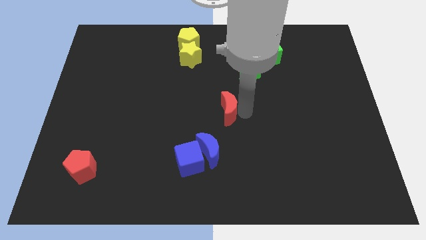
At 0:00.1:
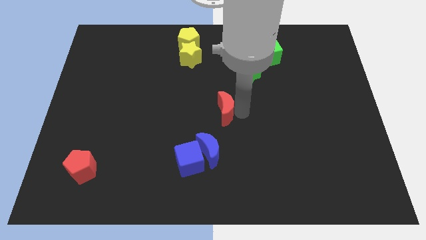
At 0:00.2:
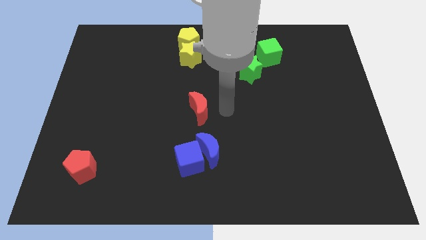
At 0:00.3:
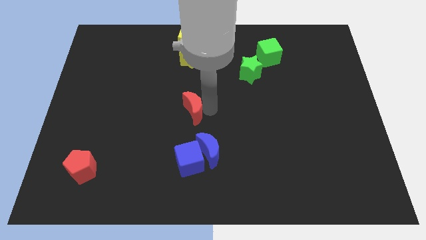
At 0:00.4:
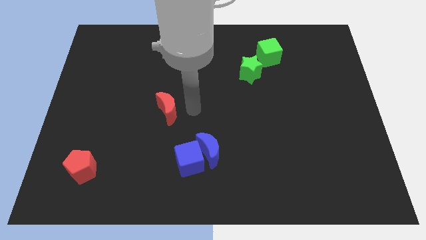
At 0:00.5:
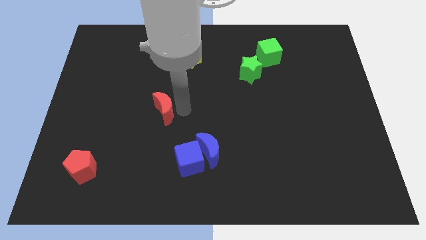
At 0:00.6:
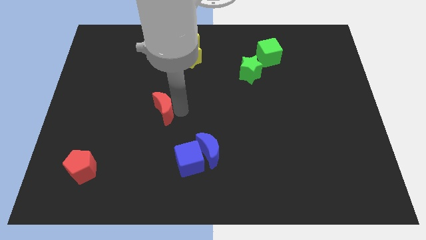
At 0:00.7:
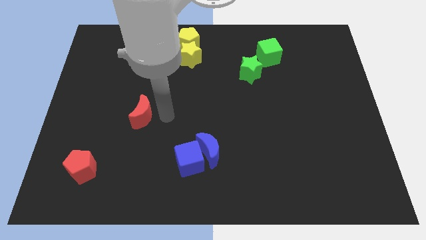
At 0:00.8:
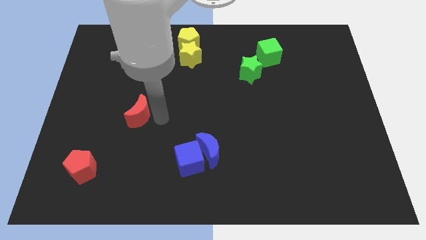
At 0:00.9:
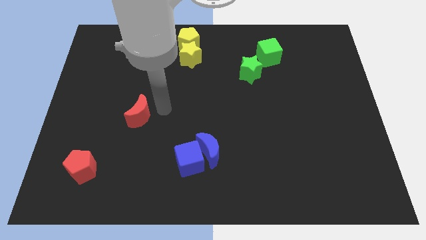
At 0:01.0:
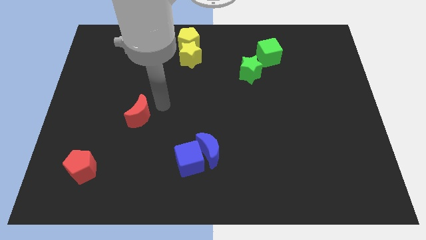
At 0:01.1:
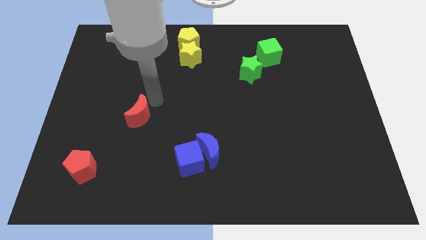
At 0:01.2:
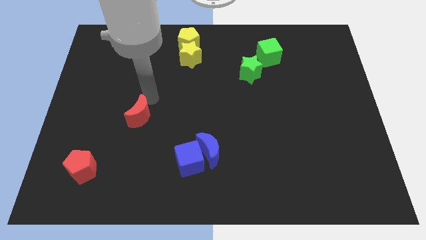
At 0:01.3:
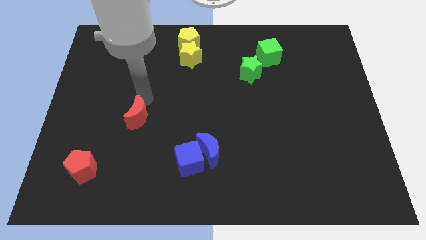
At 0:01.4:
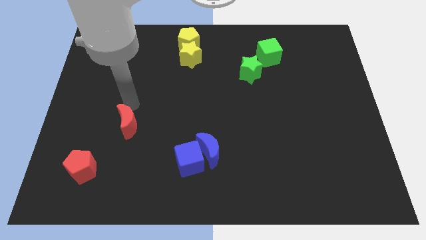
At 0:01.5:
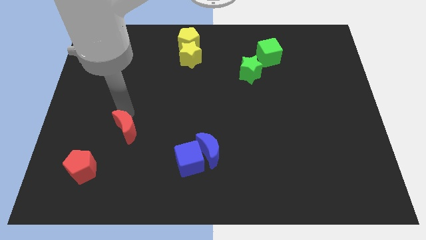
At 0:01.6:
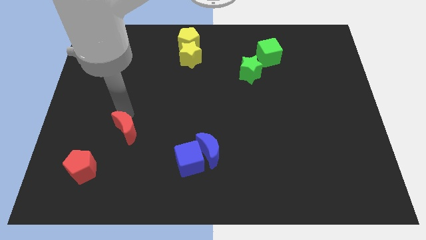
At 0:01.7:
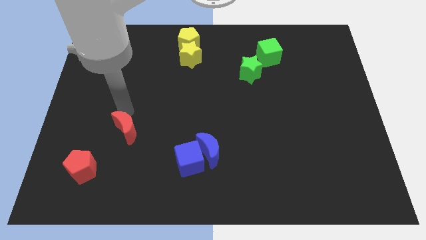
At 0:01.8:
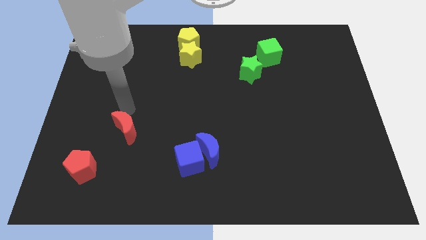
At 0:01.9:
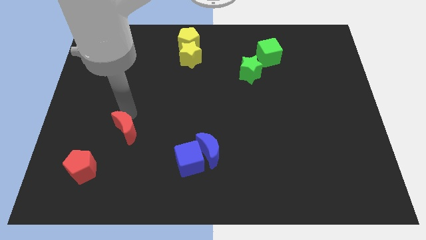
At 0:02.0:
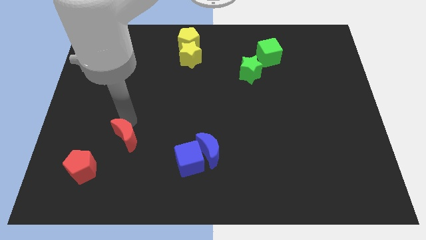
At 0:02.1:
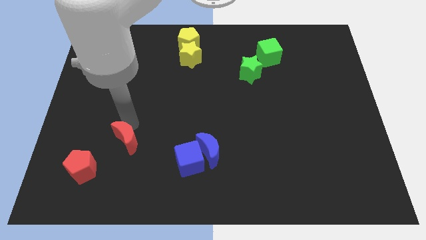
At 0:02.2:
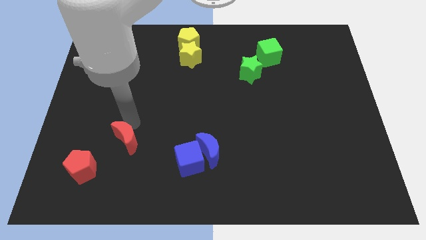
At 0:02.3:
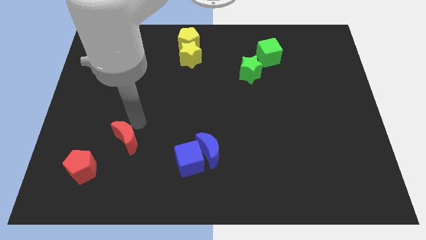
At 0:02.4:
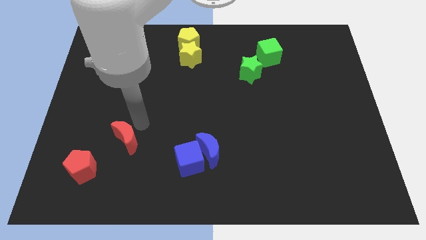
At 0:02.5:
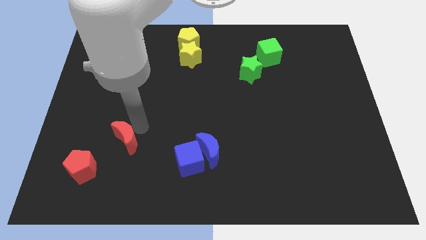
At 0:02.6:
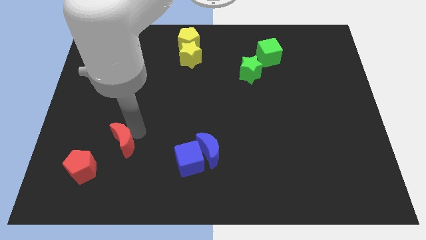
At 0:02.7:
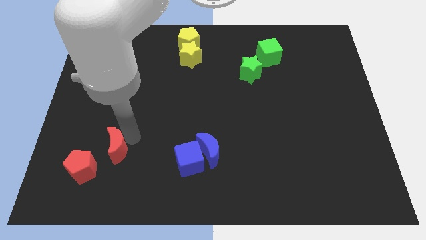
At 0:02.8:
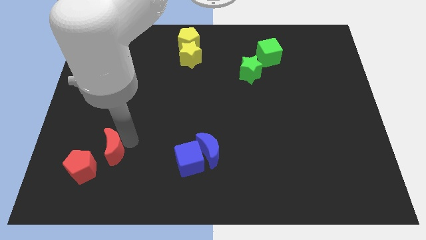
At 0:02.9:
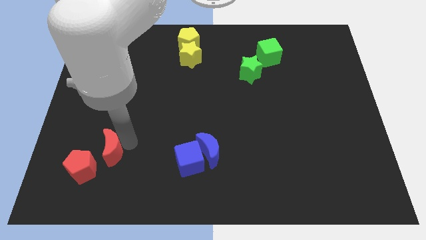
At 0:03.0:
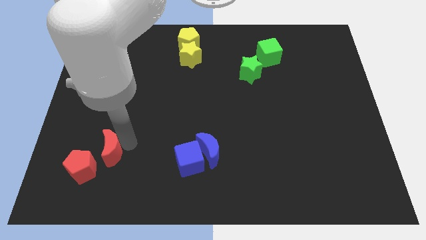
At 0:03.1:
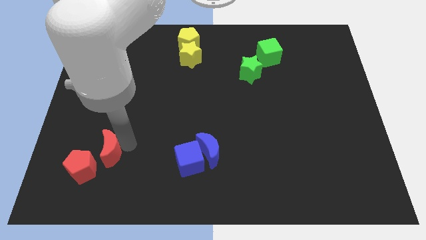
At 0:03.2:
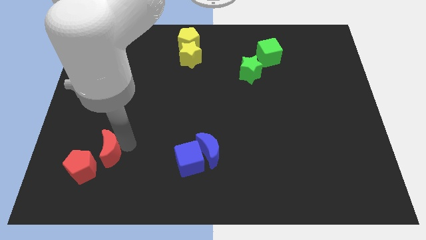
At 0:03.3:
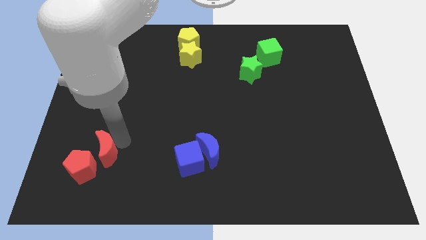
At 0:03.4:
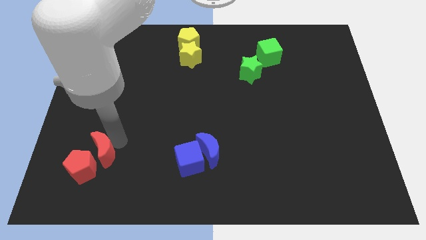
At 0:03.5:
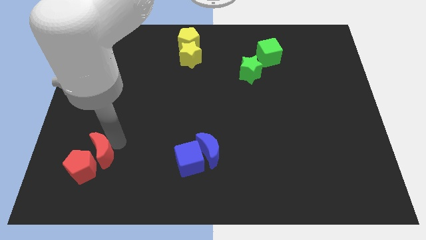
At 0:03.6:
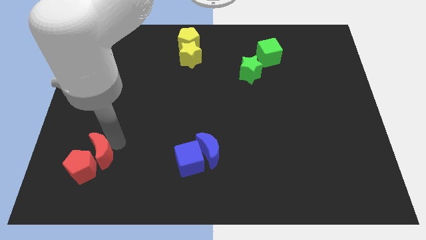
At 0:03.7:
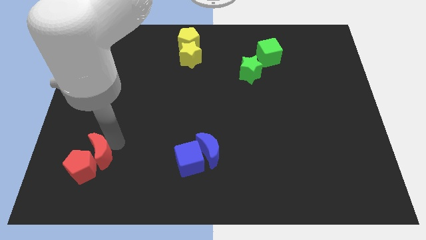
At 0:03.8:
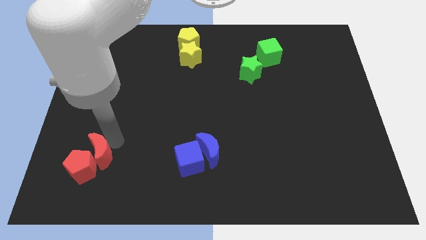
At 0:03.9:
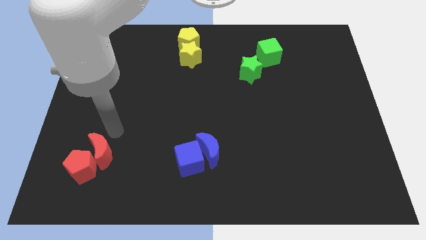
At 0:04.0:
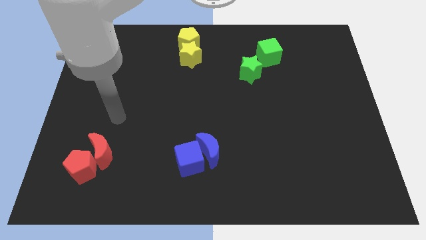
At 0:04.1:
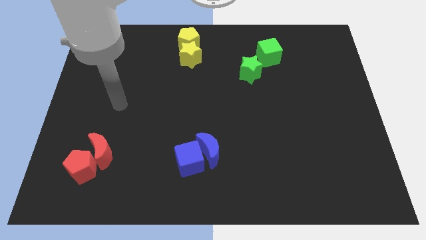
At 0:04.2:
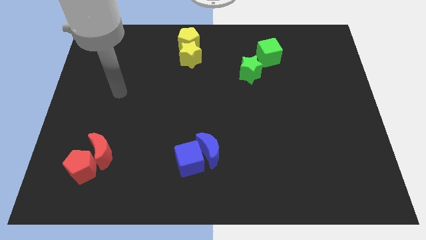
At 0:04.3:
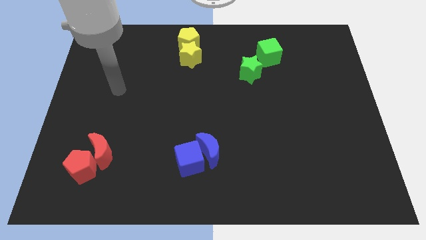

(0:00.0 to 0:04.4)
push the red moon close to the red pentagon

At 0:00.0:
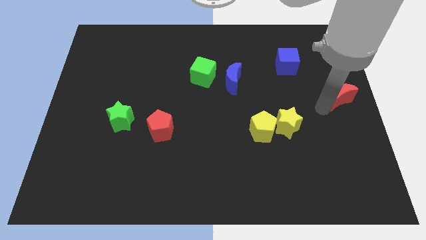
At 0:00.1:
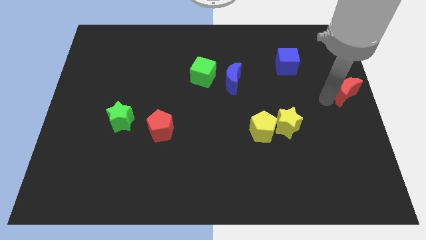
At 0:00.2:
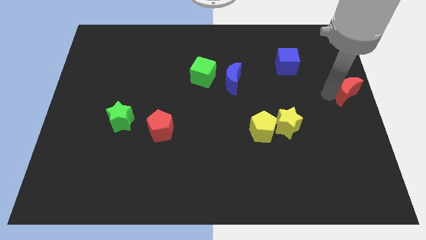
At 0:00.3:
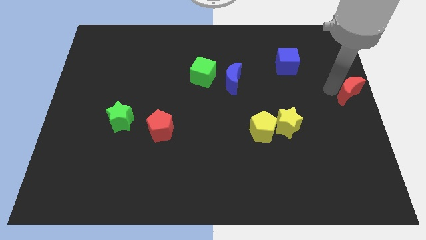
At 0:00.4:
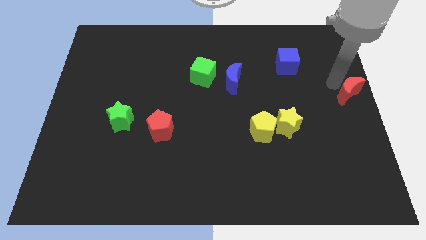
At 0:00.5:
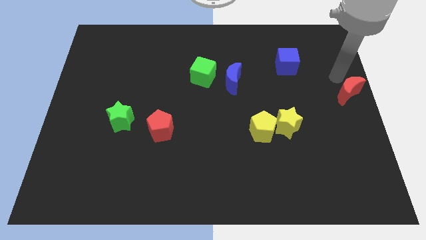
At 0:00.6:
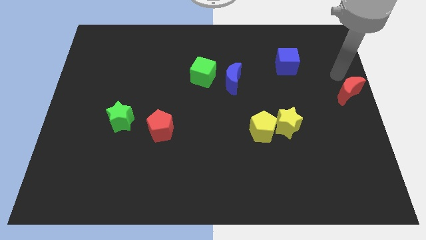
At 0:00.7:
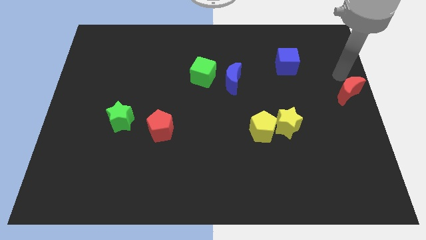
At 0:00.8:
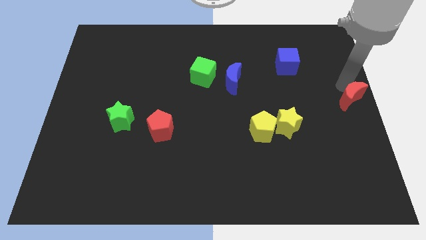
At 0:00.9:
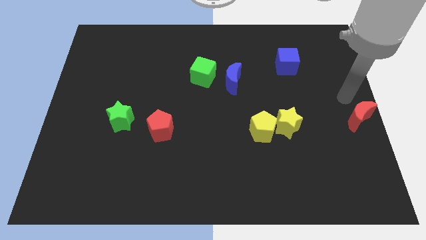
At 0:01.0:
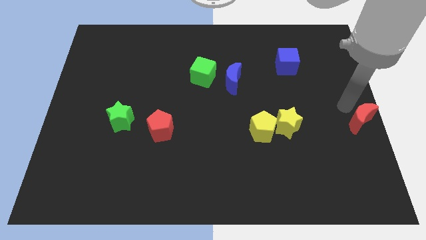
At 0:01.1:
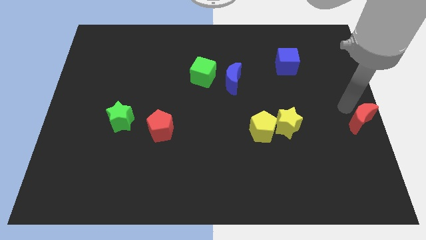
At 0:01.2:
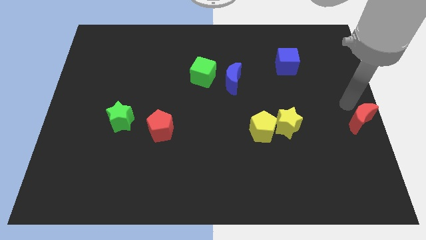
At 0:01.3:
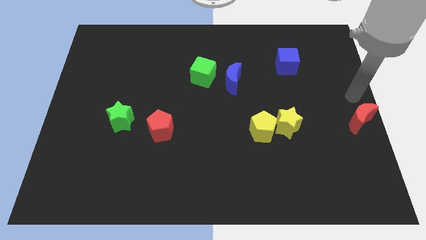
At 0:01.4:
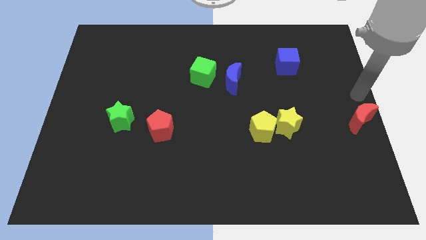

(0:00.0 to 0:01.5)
place the red moon right to the yellow pentagon

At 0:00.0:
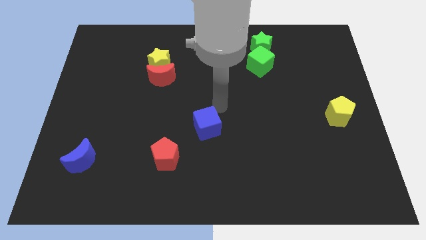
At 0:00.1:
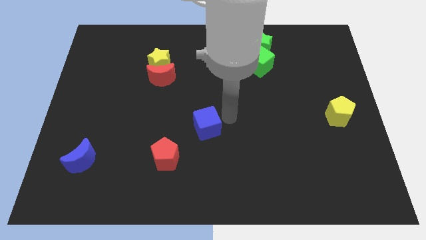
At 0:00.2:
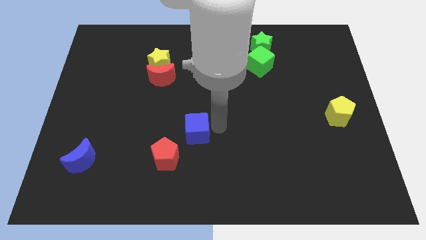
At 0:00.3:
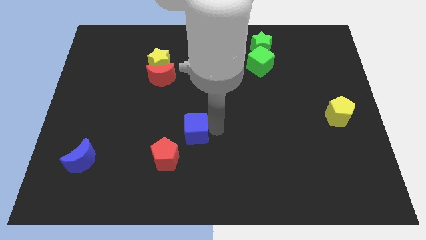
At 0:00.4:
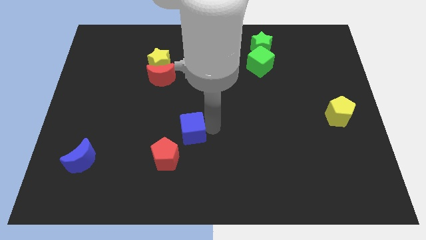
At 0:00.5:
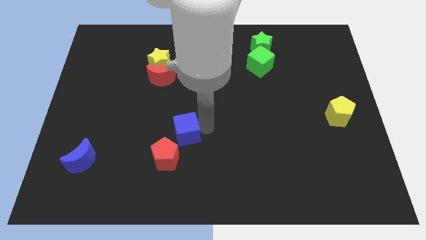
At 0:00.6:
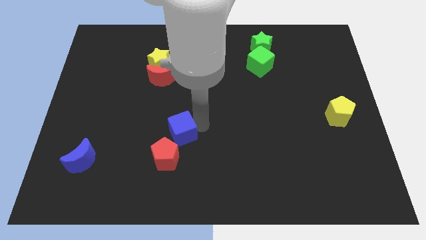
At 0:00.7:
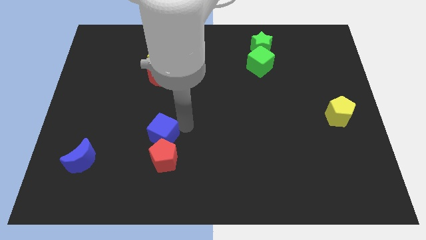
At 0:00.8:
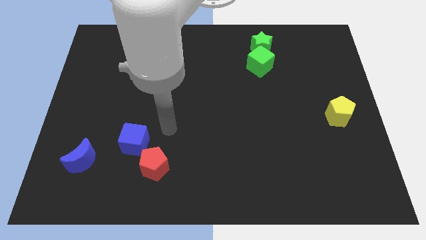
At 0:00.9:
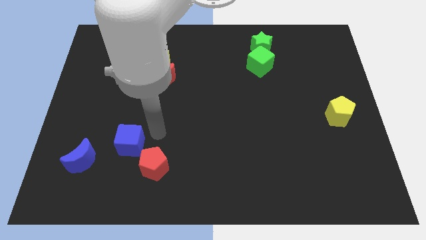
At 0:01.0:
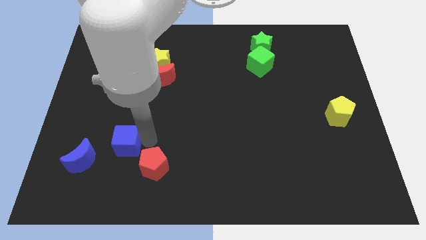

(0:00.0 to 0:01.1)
move blue cube to the top left of red pentagon

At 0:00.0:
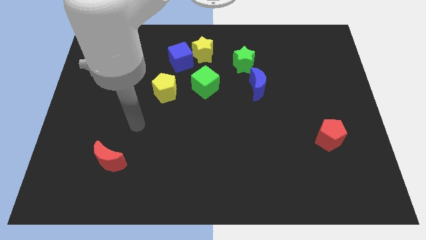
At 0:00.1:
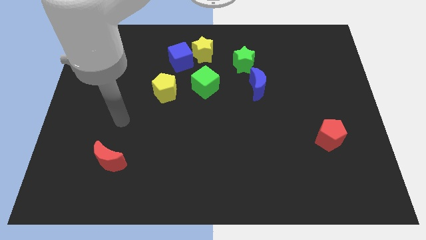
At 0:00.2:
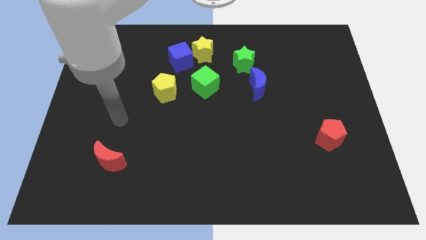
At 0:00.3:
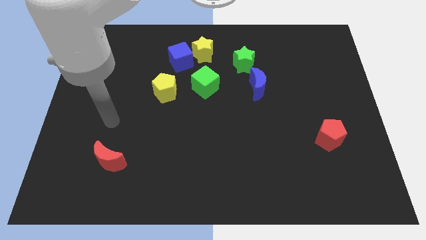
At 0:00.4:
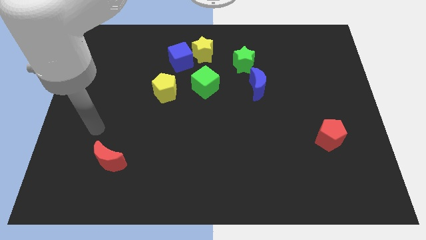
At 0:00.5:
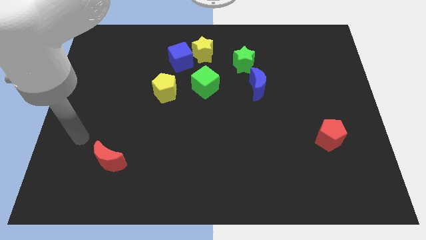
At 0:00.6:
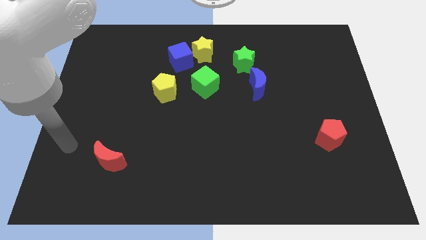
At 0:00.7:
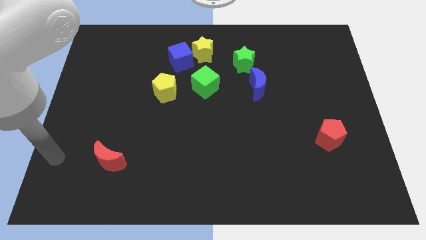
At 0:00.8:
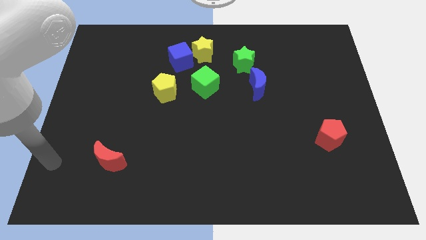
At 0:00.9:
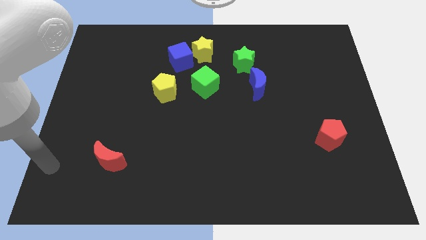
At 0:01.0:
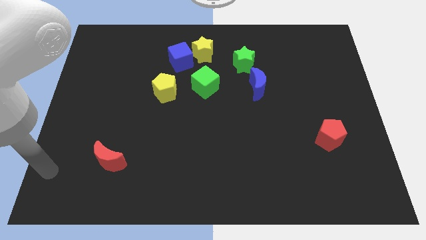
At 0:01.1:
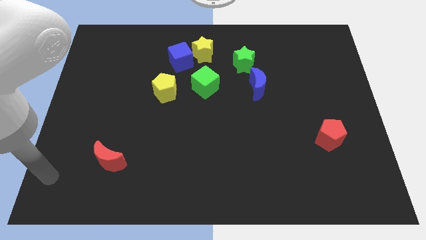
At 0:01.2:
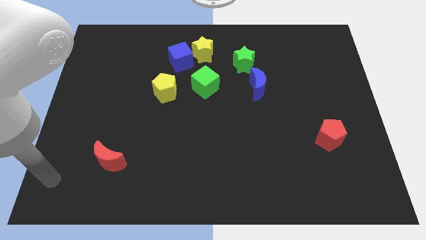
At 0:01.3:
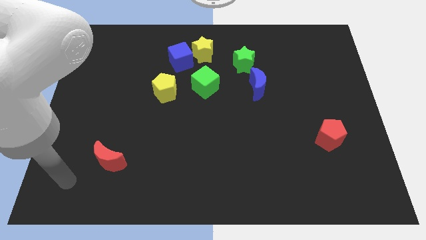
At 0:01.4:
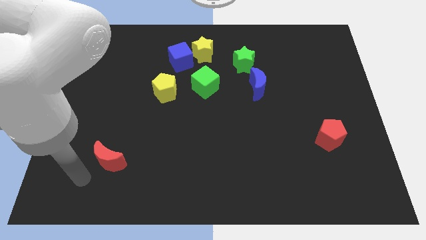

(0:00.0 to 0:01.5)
place your arm to the bottom of red moon

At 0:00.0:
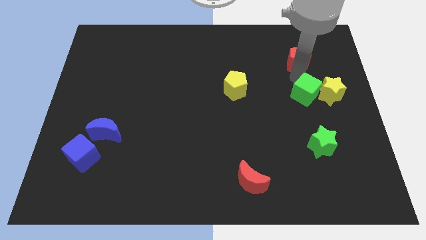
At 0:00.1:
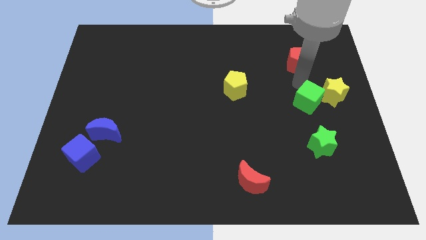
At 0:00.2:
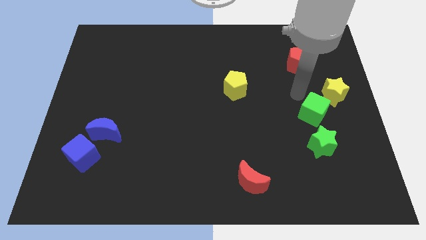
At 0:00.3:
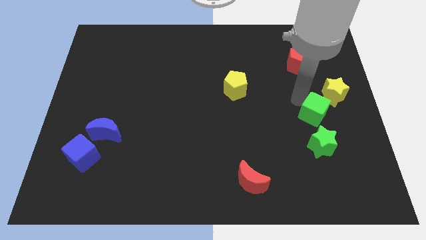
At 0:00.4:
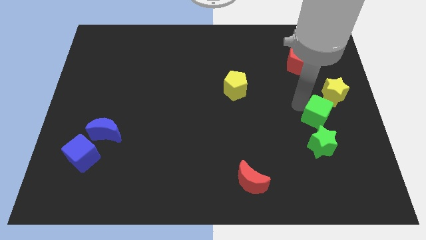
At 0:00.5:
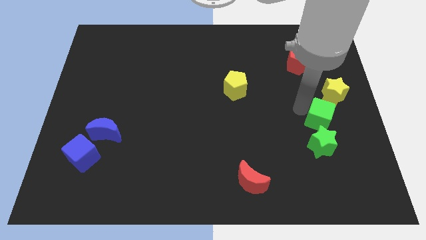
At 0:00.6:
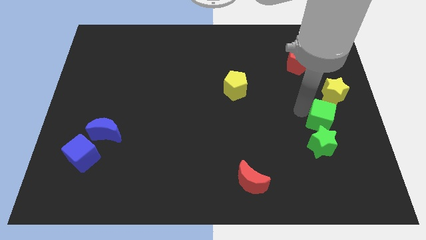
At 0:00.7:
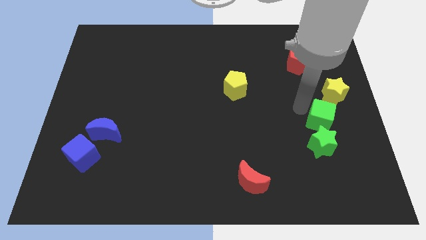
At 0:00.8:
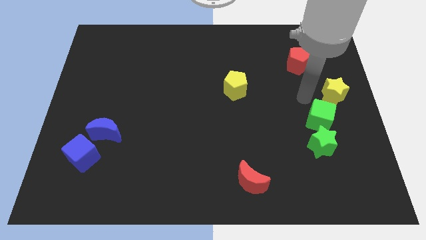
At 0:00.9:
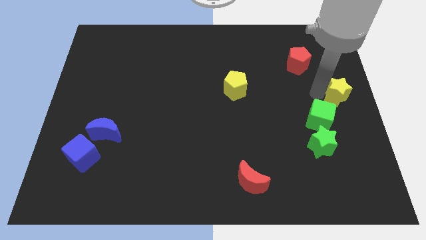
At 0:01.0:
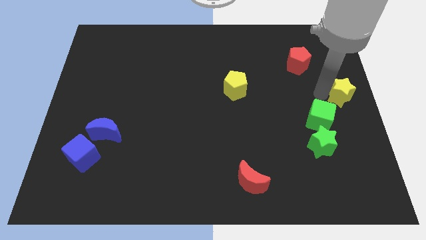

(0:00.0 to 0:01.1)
push green cube into green star
